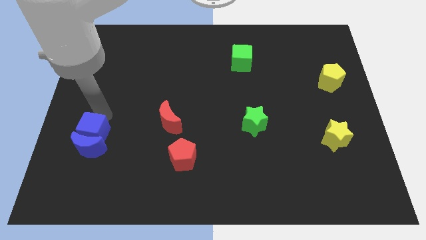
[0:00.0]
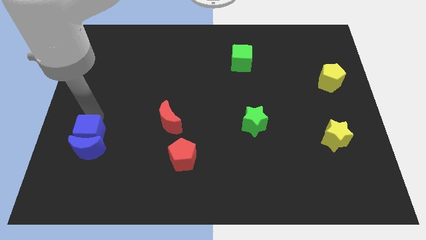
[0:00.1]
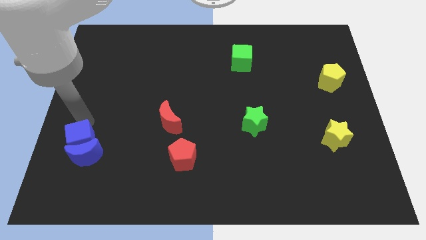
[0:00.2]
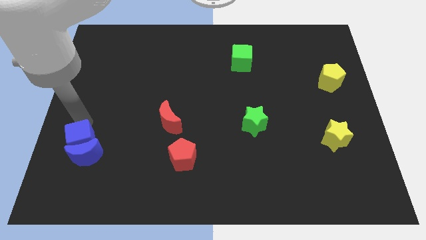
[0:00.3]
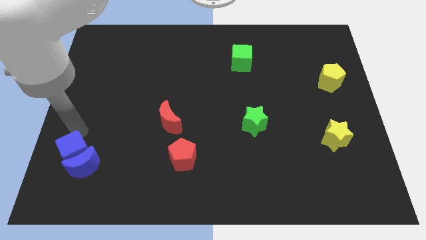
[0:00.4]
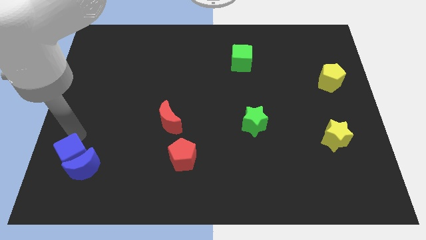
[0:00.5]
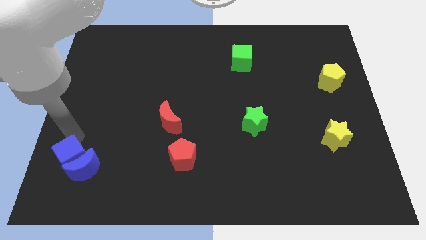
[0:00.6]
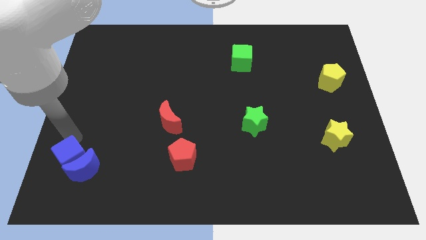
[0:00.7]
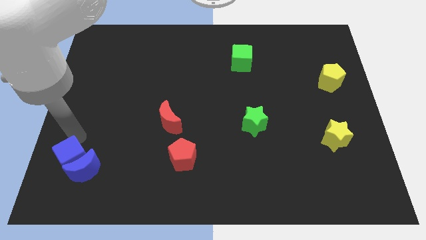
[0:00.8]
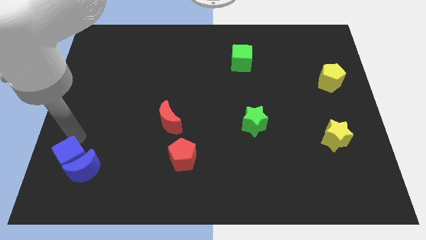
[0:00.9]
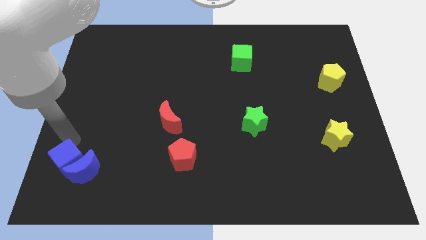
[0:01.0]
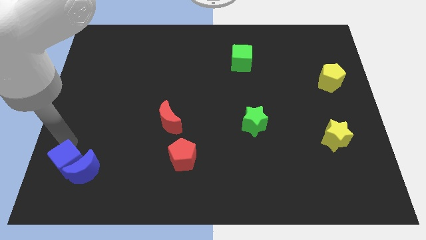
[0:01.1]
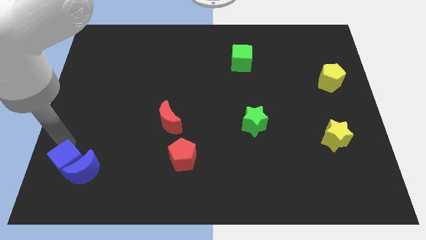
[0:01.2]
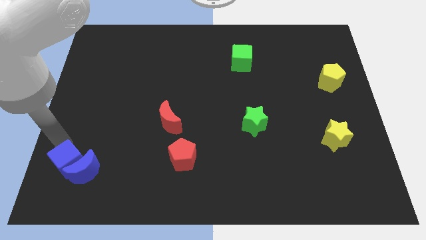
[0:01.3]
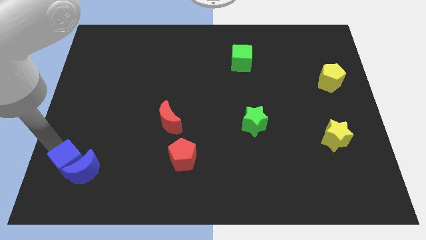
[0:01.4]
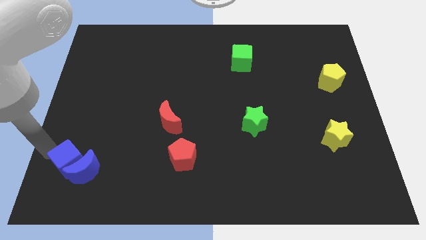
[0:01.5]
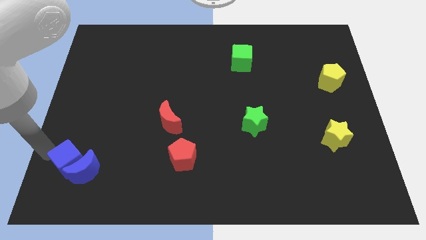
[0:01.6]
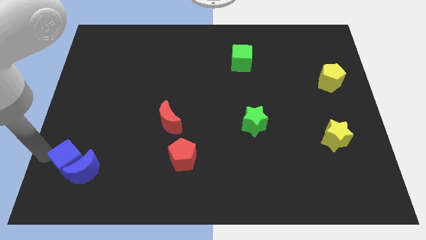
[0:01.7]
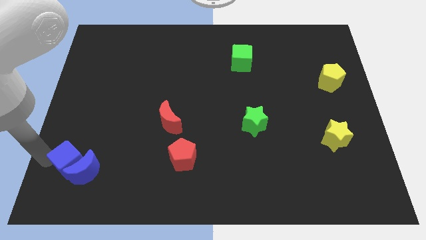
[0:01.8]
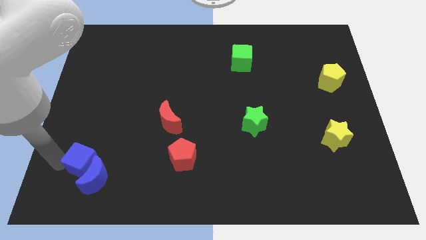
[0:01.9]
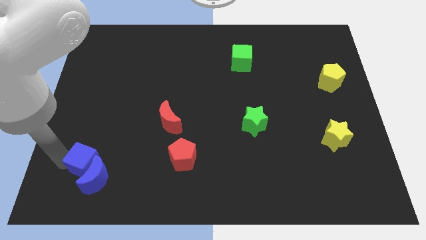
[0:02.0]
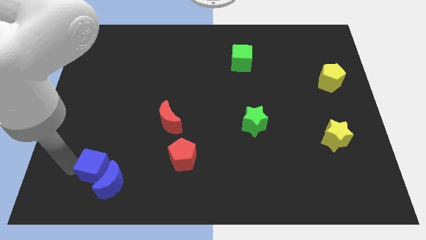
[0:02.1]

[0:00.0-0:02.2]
push the blue blocks towards bottom

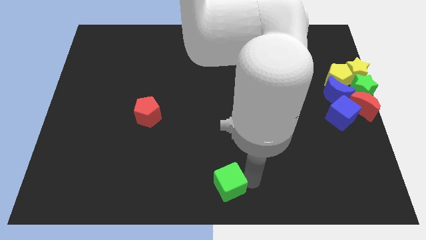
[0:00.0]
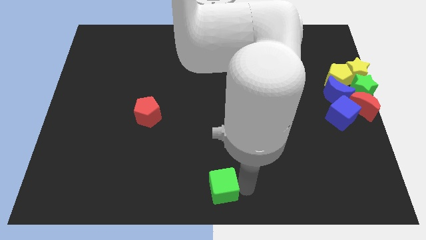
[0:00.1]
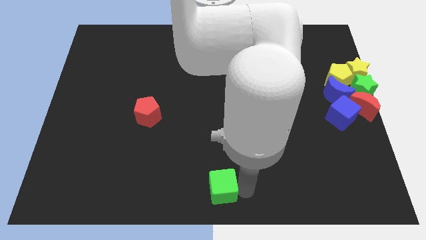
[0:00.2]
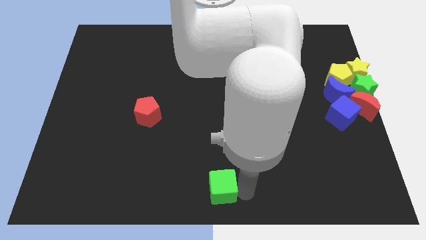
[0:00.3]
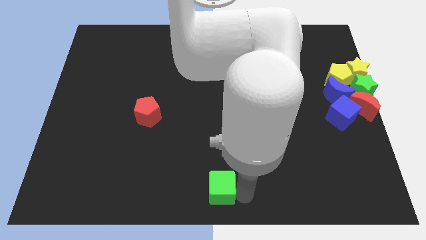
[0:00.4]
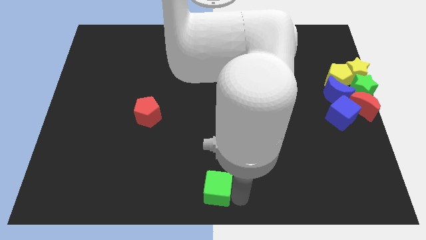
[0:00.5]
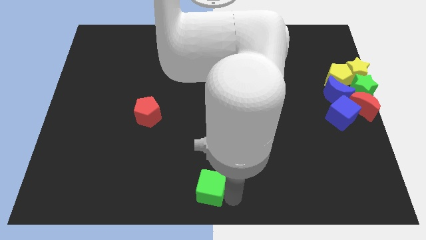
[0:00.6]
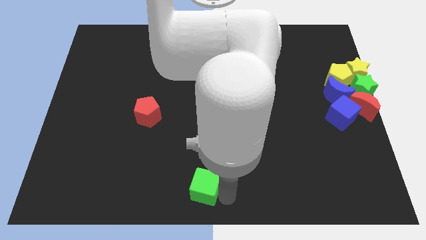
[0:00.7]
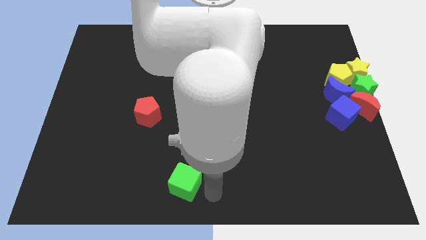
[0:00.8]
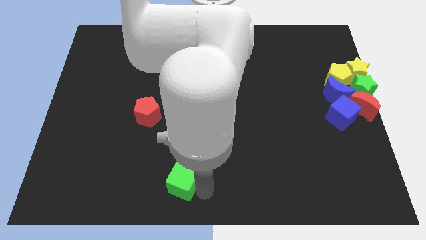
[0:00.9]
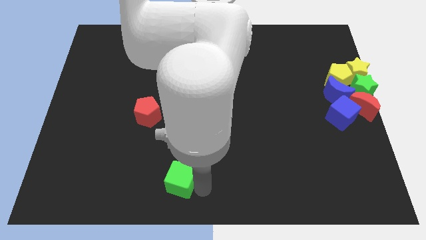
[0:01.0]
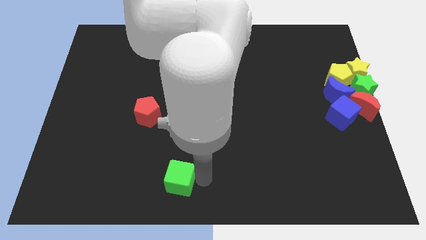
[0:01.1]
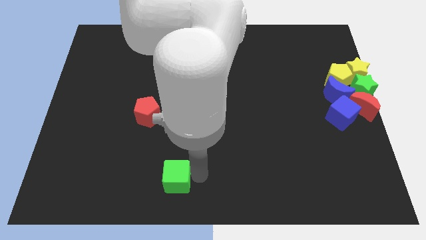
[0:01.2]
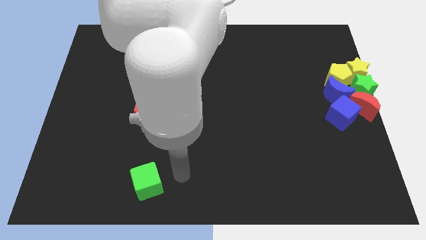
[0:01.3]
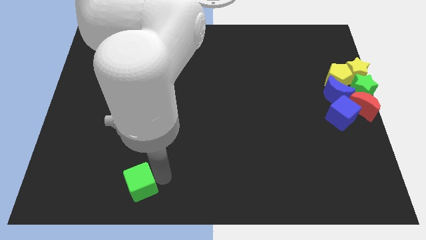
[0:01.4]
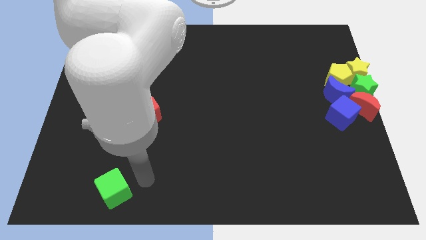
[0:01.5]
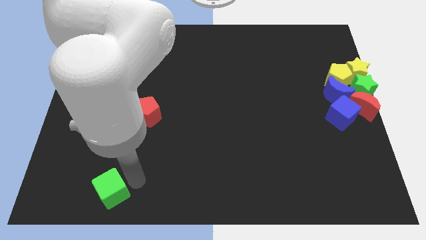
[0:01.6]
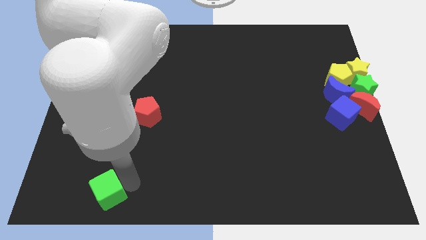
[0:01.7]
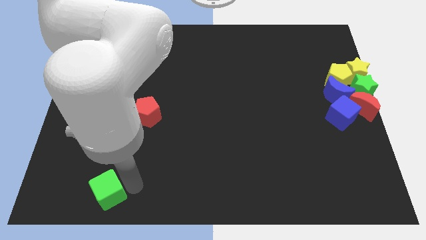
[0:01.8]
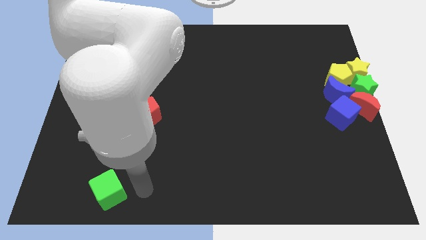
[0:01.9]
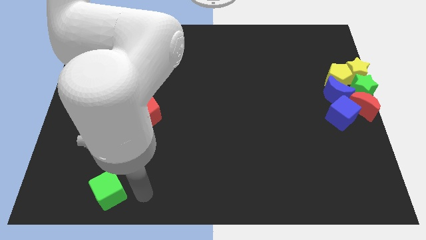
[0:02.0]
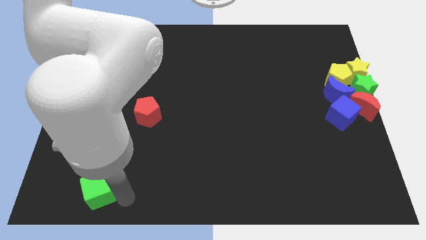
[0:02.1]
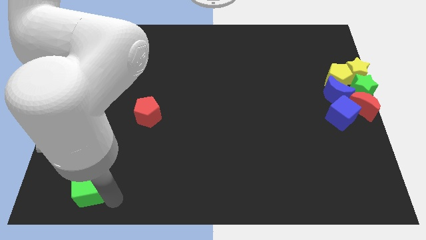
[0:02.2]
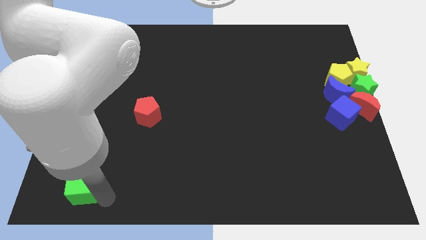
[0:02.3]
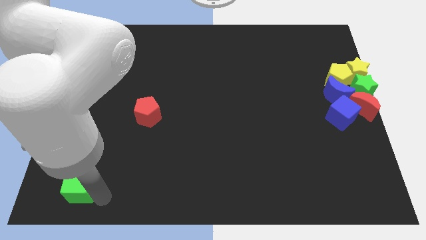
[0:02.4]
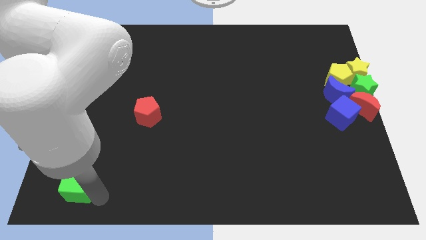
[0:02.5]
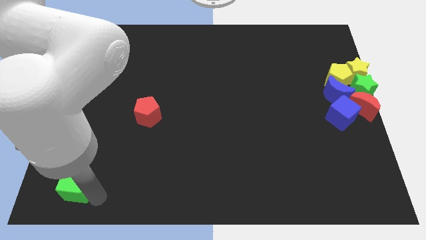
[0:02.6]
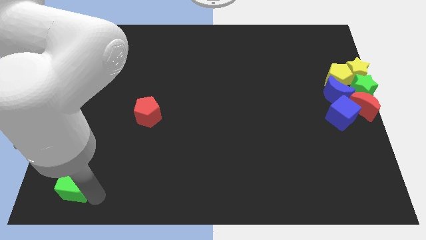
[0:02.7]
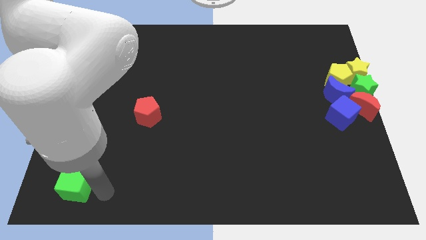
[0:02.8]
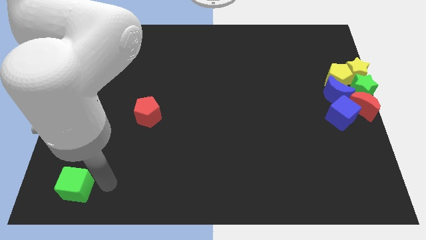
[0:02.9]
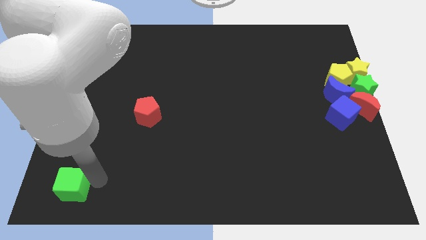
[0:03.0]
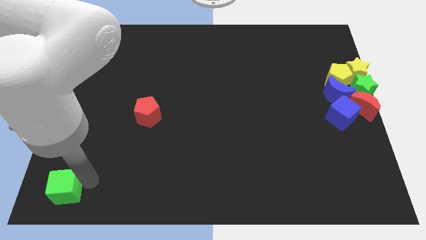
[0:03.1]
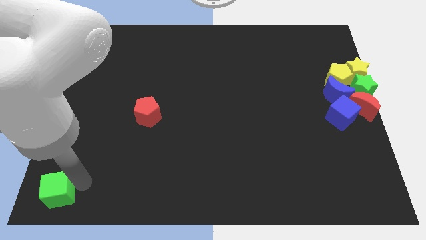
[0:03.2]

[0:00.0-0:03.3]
move the green cube bottom left of the board

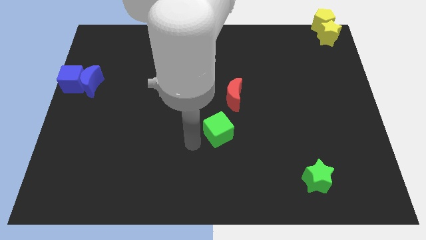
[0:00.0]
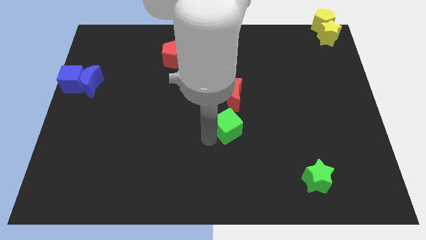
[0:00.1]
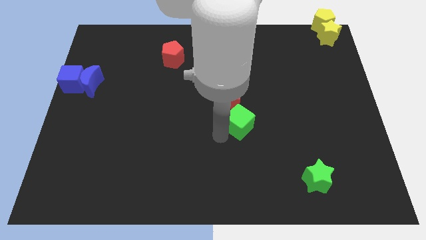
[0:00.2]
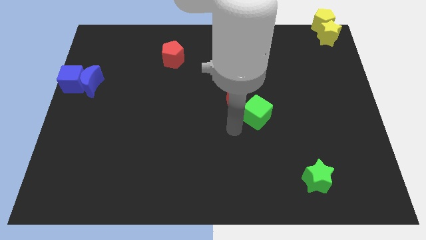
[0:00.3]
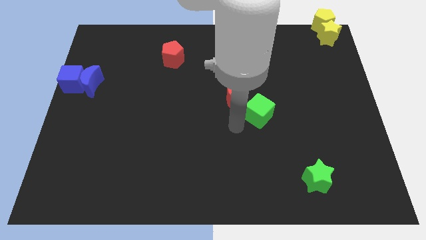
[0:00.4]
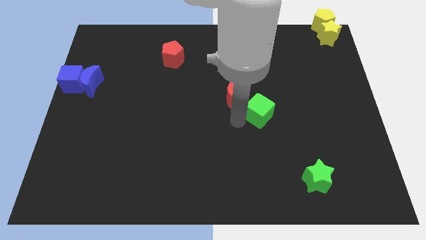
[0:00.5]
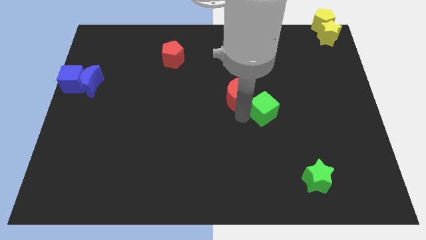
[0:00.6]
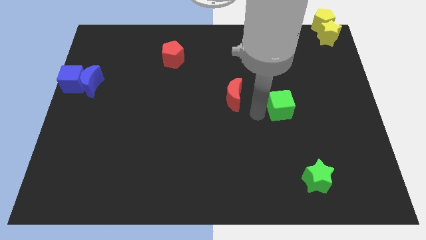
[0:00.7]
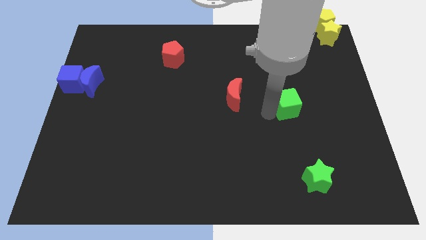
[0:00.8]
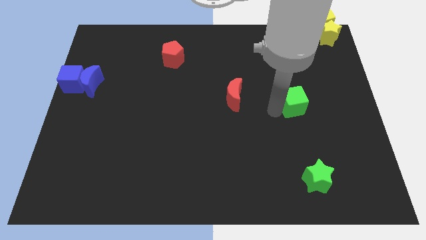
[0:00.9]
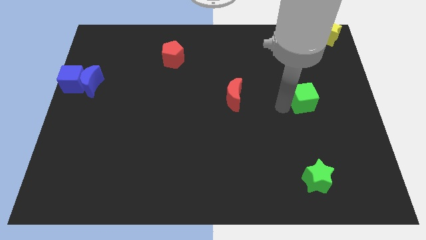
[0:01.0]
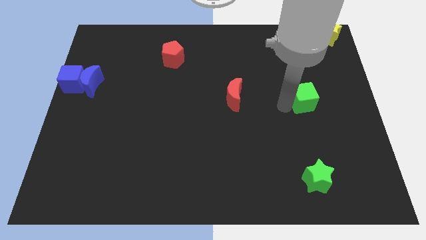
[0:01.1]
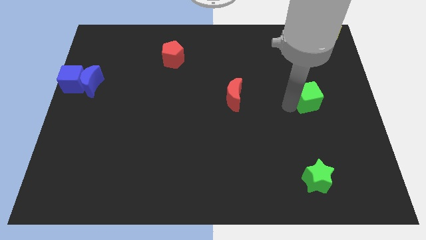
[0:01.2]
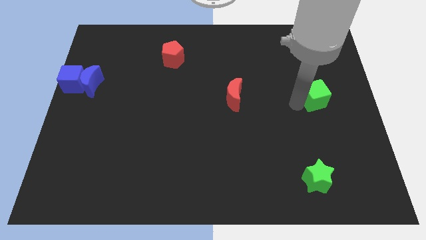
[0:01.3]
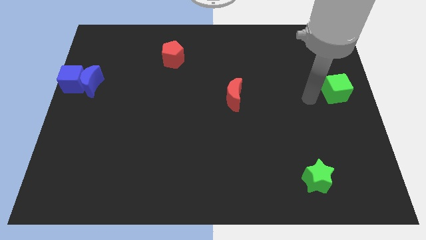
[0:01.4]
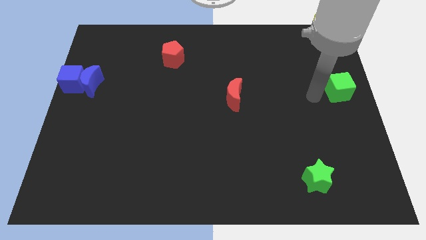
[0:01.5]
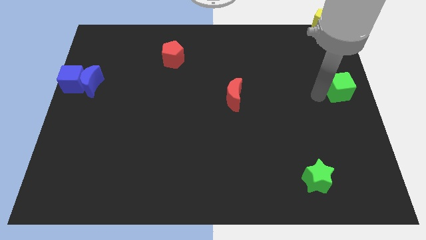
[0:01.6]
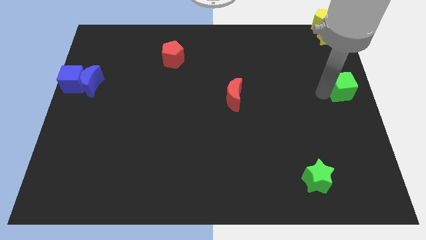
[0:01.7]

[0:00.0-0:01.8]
place the green cube to the bottom of the yellow star

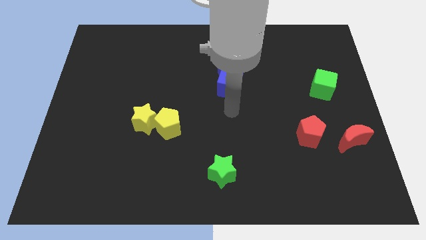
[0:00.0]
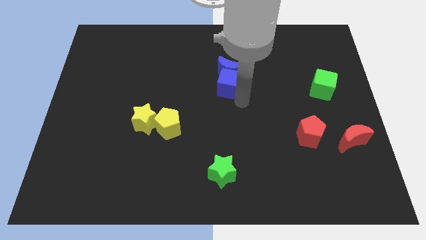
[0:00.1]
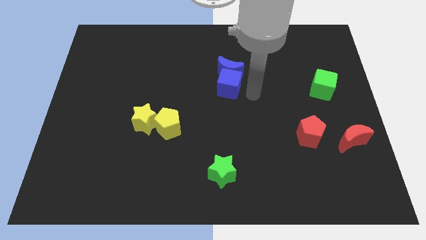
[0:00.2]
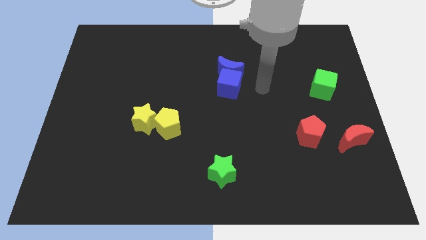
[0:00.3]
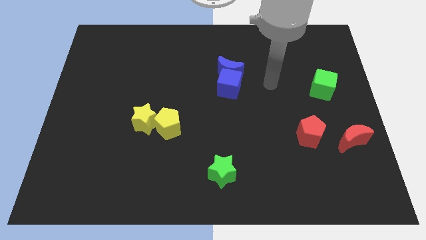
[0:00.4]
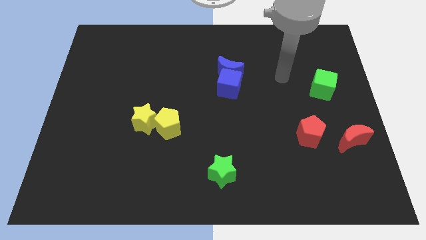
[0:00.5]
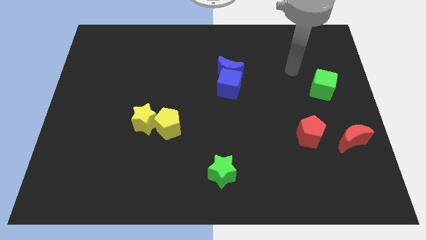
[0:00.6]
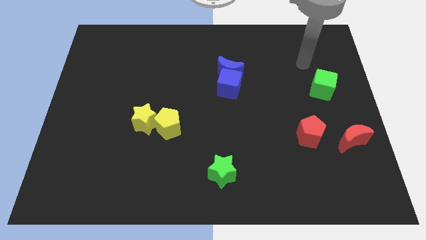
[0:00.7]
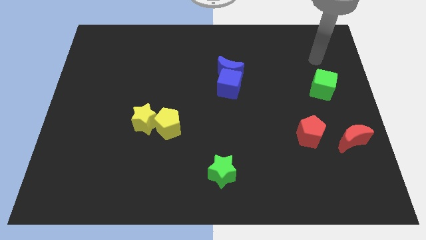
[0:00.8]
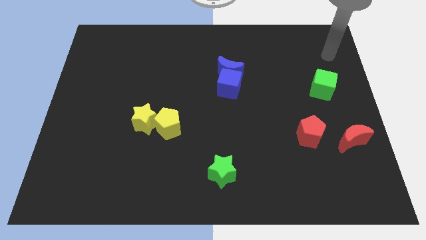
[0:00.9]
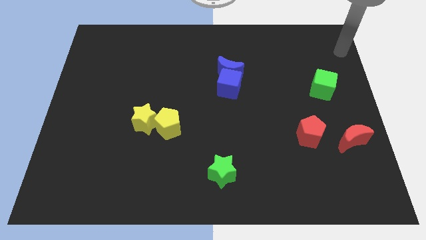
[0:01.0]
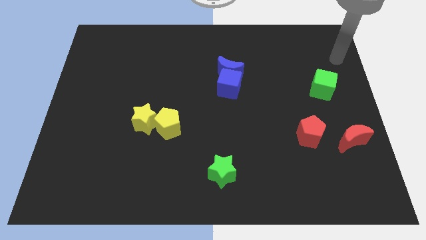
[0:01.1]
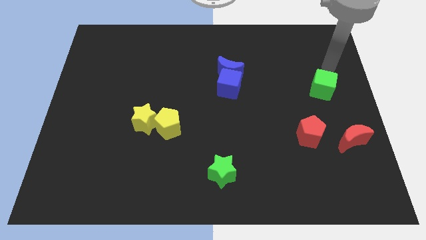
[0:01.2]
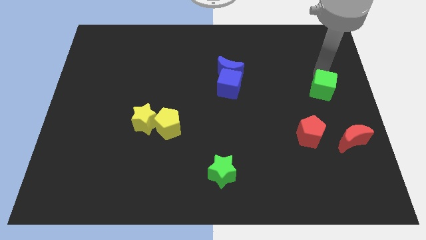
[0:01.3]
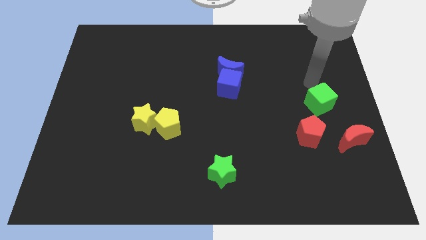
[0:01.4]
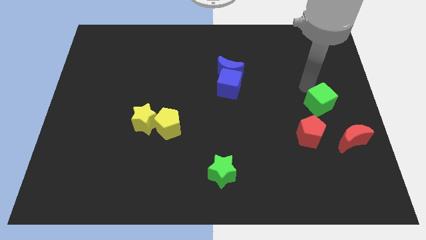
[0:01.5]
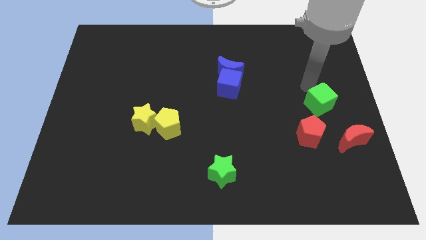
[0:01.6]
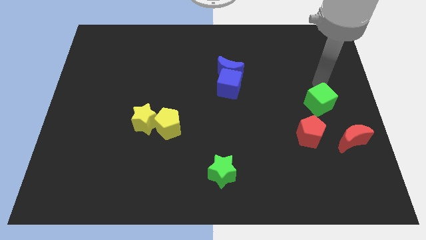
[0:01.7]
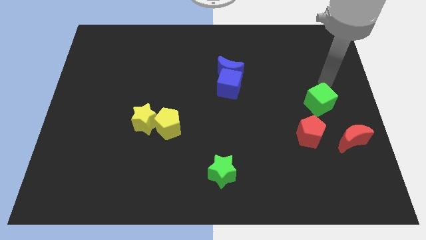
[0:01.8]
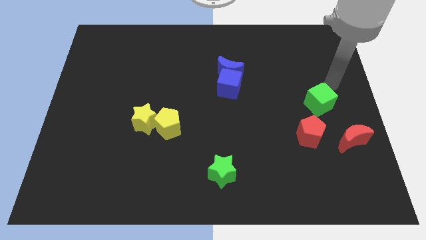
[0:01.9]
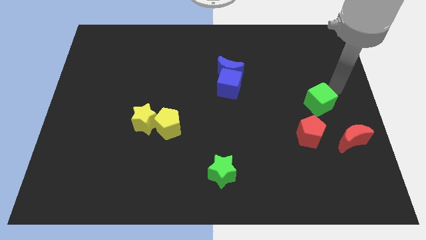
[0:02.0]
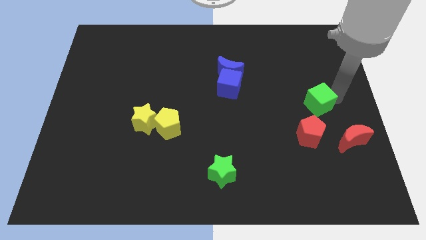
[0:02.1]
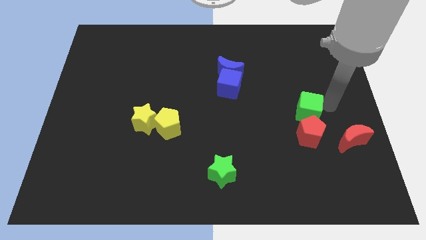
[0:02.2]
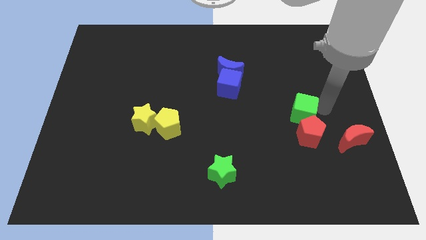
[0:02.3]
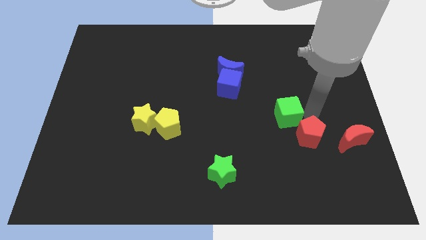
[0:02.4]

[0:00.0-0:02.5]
move the green cube slightly downwards
